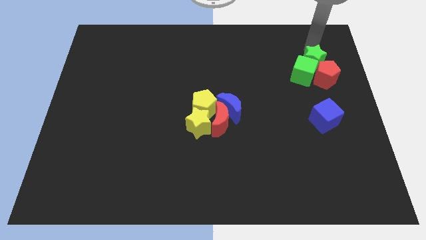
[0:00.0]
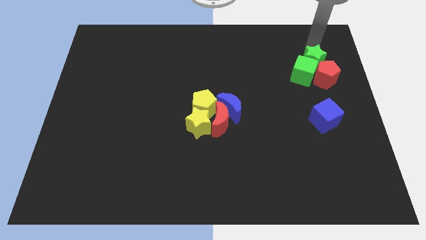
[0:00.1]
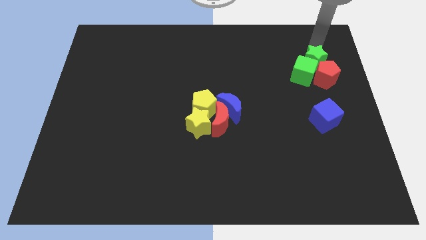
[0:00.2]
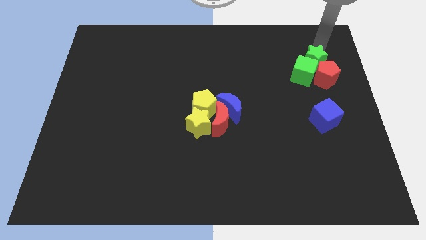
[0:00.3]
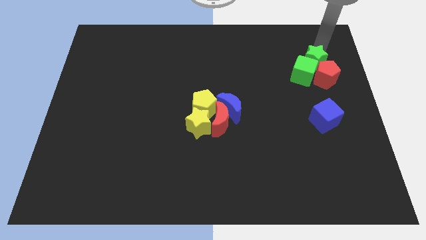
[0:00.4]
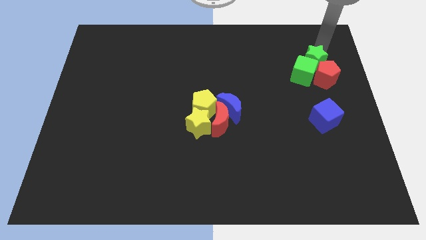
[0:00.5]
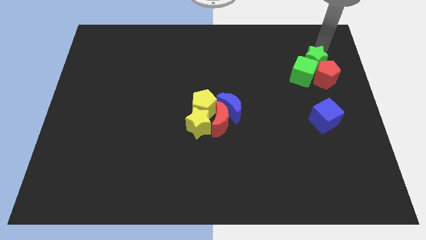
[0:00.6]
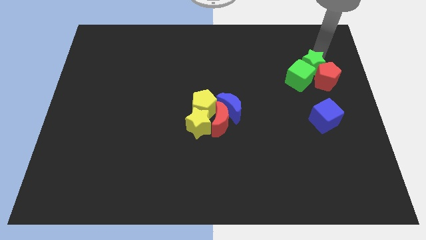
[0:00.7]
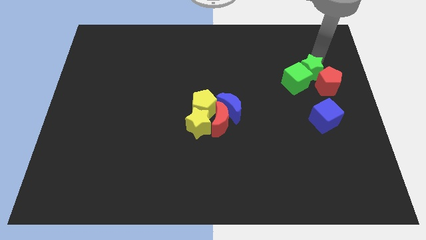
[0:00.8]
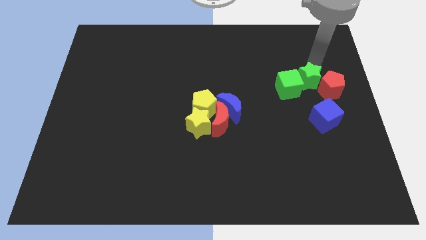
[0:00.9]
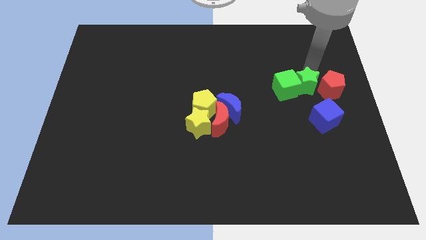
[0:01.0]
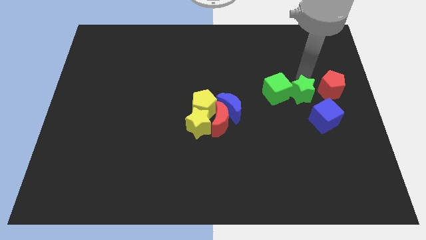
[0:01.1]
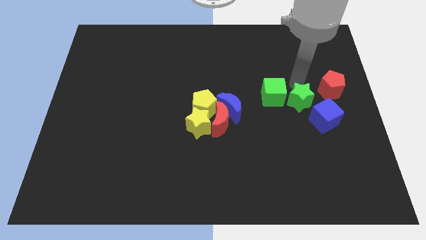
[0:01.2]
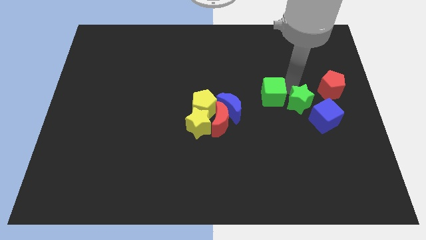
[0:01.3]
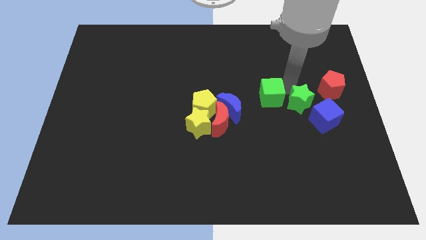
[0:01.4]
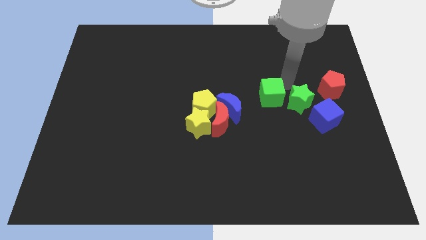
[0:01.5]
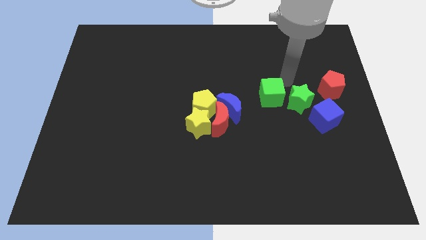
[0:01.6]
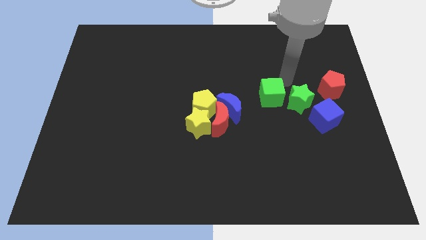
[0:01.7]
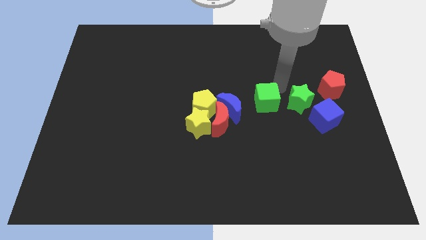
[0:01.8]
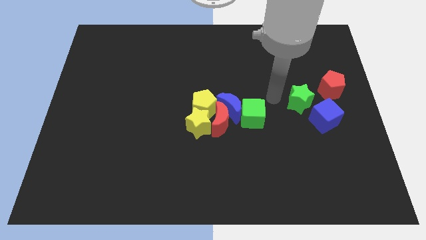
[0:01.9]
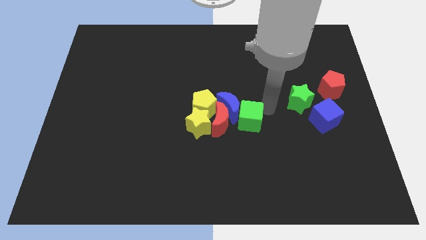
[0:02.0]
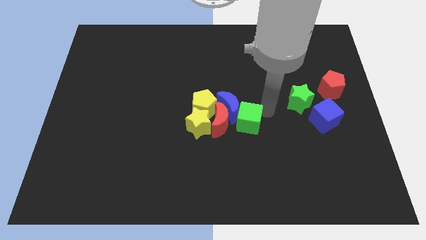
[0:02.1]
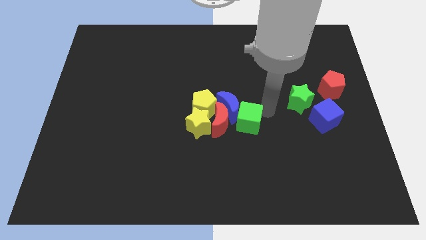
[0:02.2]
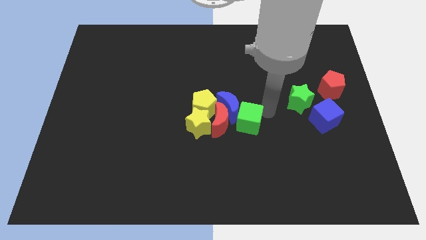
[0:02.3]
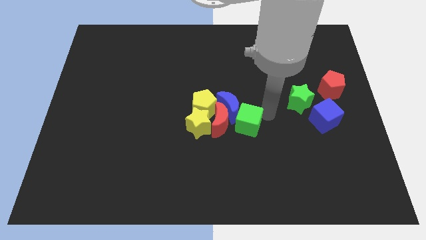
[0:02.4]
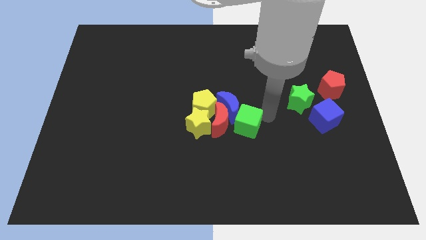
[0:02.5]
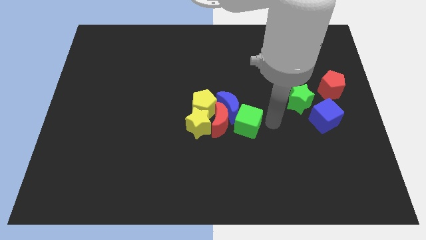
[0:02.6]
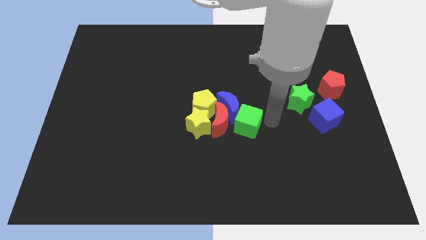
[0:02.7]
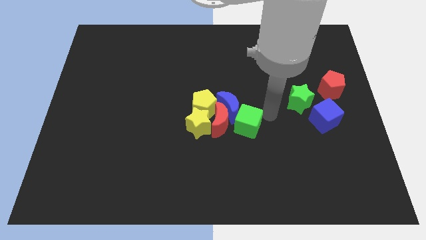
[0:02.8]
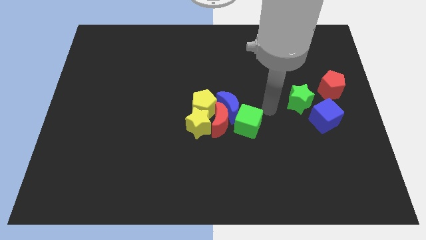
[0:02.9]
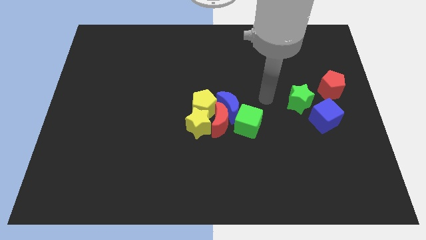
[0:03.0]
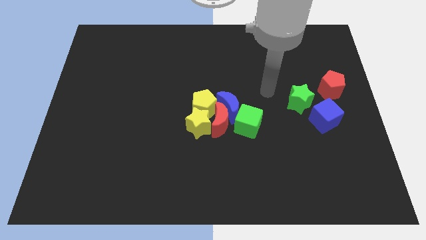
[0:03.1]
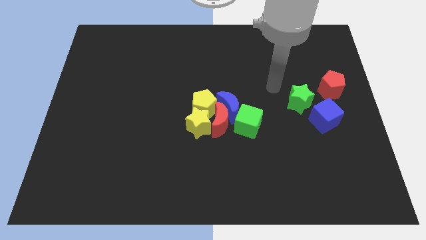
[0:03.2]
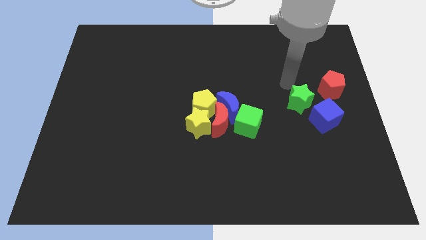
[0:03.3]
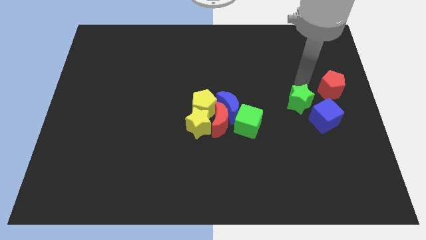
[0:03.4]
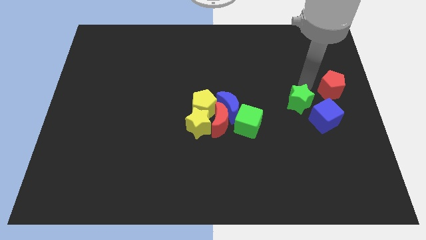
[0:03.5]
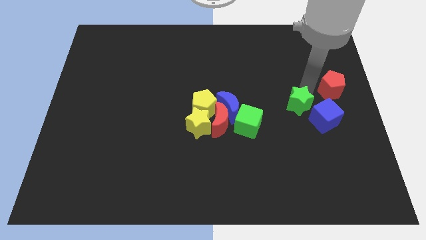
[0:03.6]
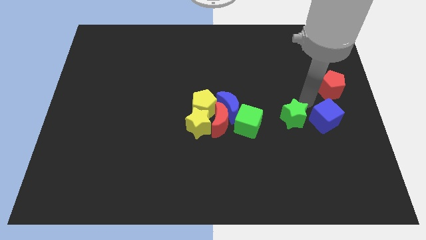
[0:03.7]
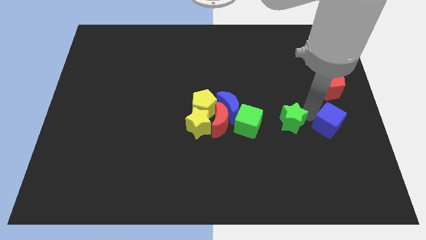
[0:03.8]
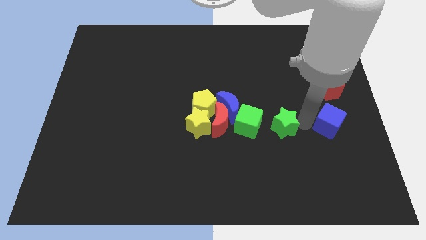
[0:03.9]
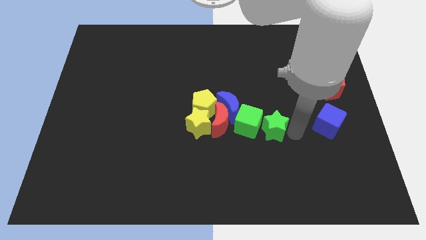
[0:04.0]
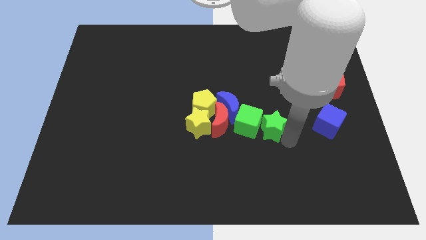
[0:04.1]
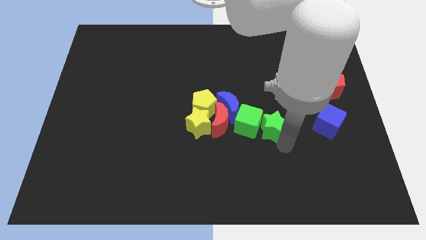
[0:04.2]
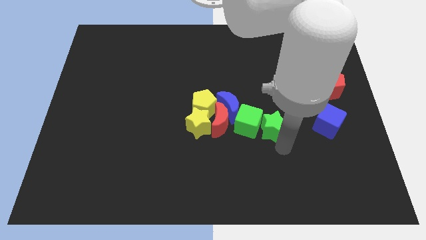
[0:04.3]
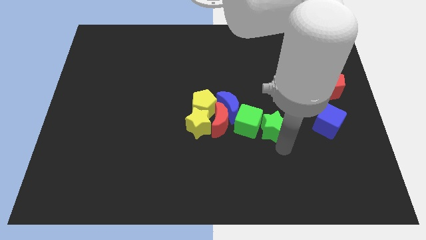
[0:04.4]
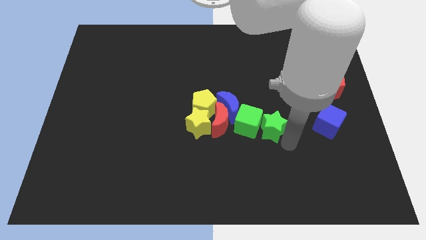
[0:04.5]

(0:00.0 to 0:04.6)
move the green blocks to the bottom right of the blue moon

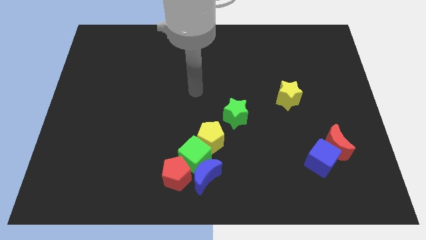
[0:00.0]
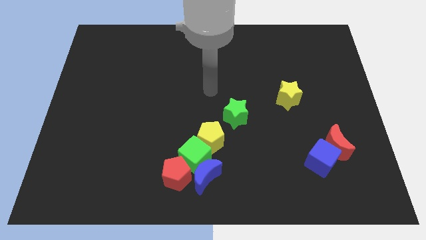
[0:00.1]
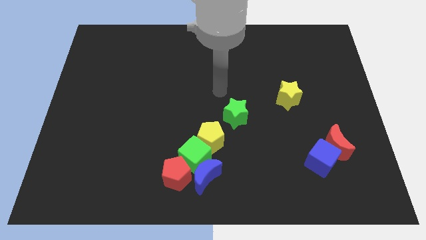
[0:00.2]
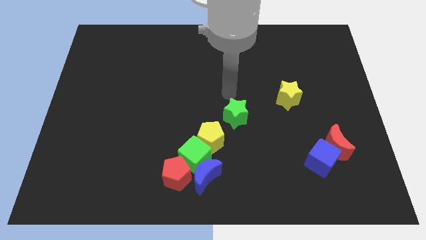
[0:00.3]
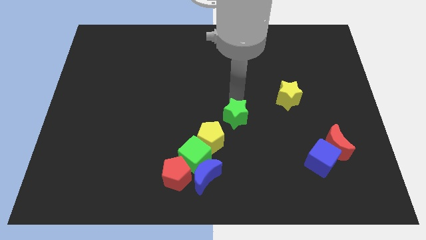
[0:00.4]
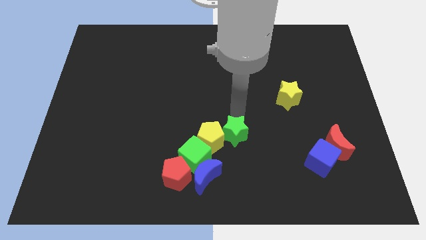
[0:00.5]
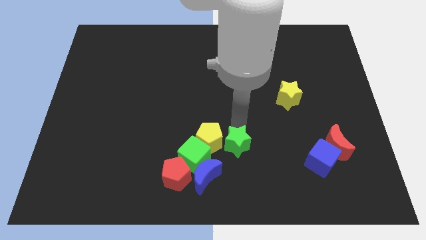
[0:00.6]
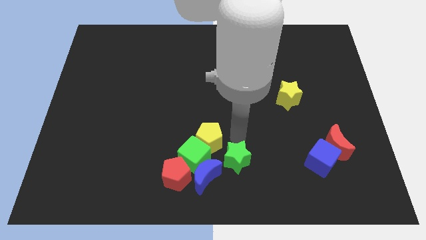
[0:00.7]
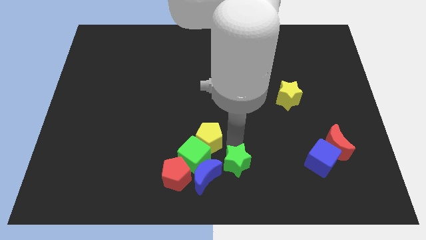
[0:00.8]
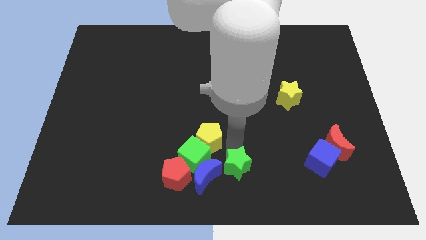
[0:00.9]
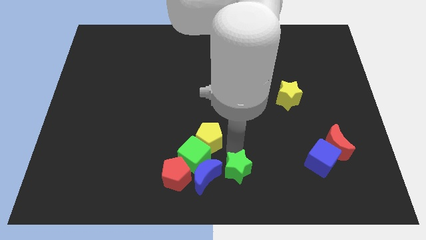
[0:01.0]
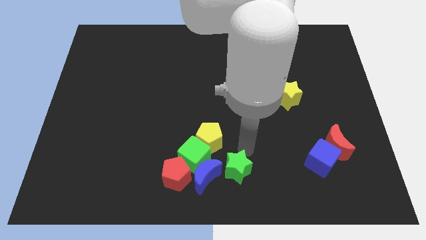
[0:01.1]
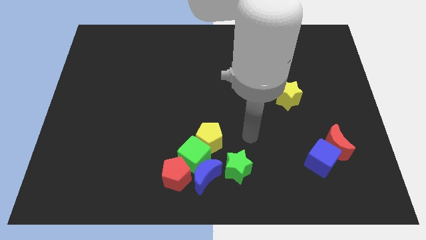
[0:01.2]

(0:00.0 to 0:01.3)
move the green star closer to the blue crescent

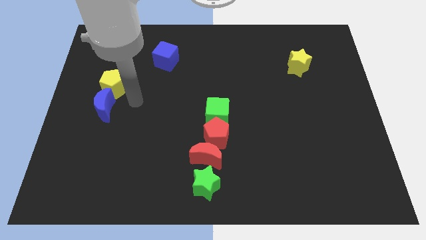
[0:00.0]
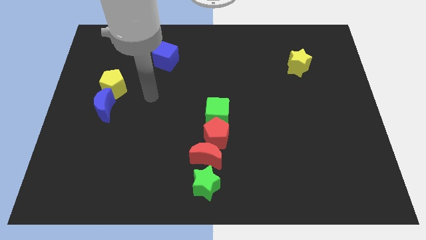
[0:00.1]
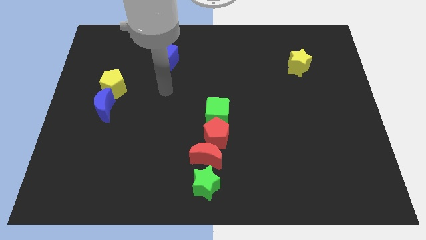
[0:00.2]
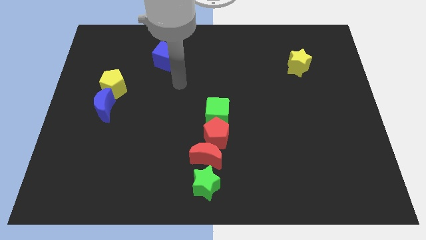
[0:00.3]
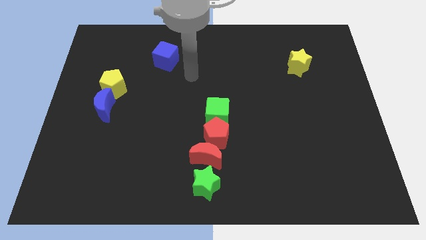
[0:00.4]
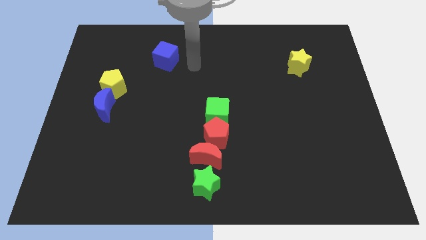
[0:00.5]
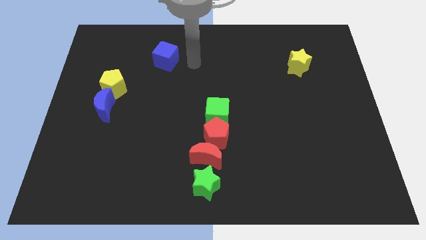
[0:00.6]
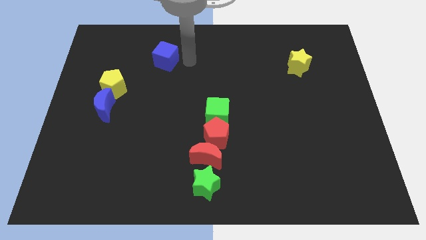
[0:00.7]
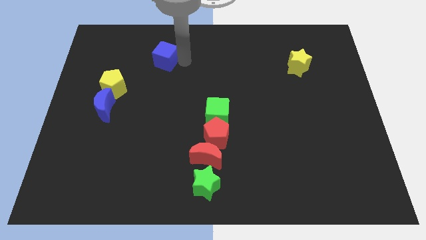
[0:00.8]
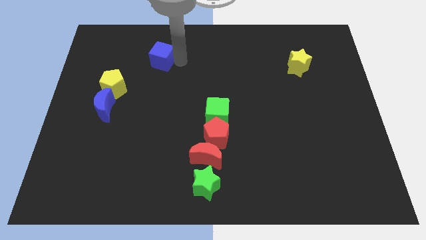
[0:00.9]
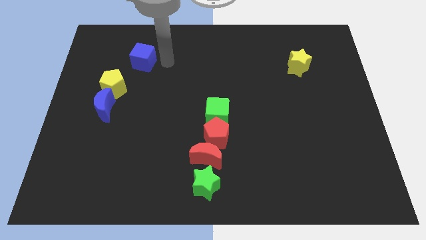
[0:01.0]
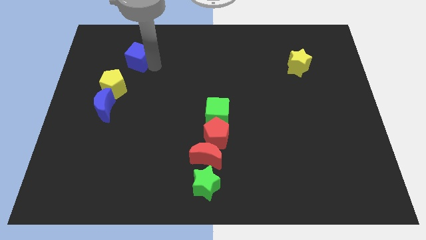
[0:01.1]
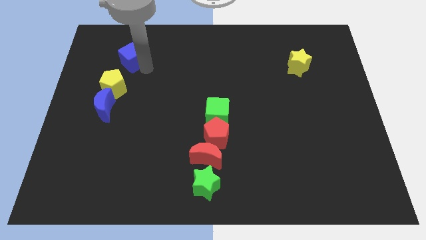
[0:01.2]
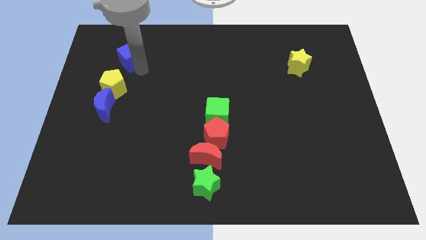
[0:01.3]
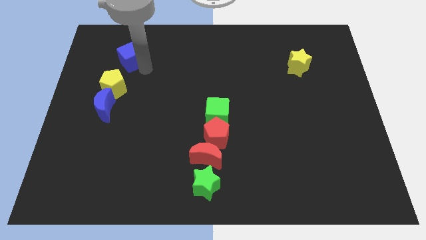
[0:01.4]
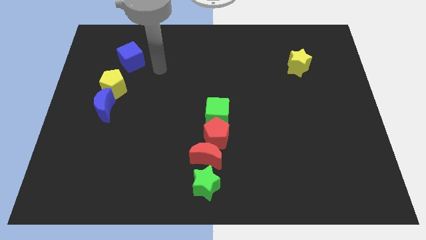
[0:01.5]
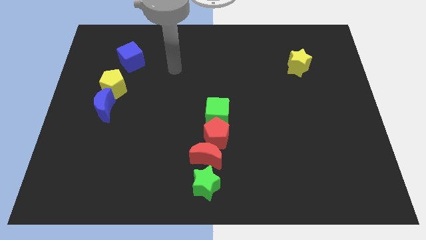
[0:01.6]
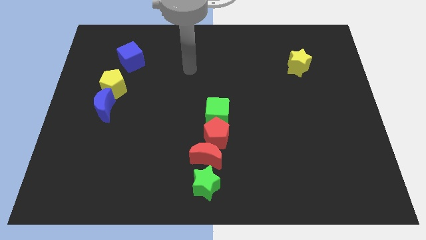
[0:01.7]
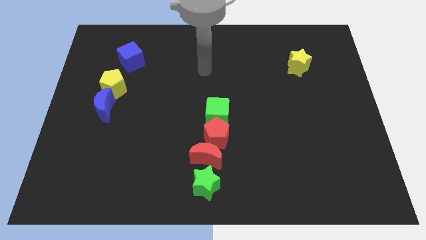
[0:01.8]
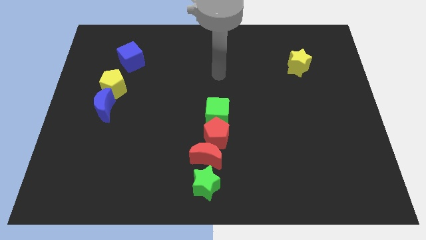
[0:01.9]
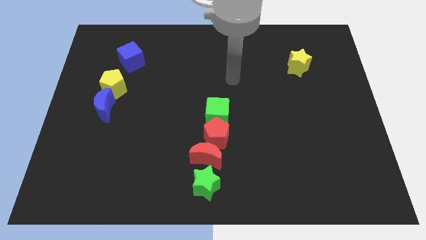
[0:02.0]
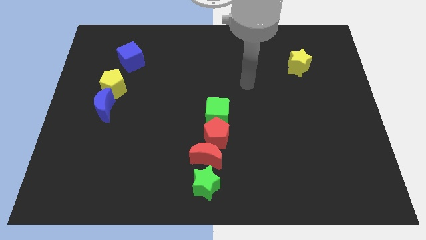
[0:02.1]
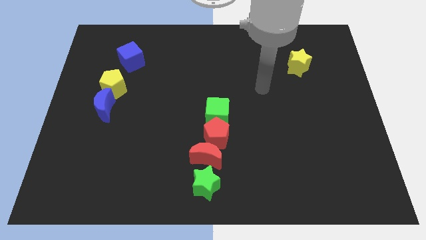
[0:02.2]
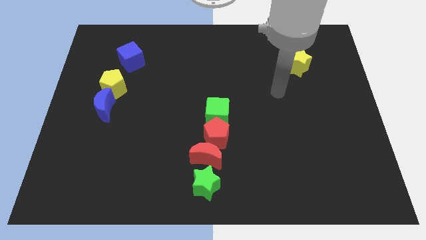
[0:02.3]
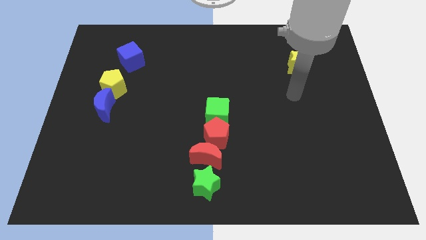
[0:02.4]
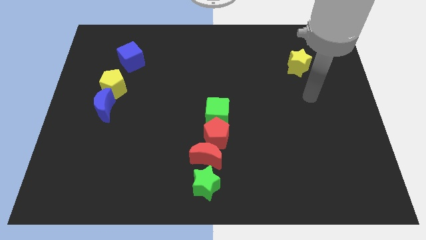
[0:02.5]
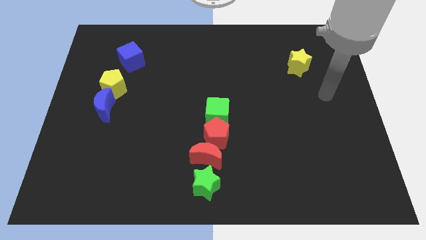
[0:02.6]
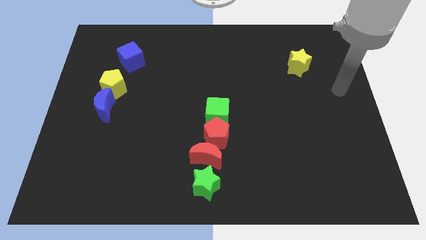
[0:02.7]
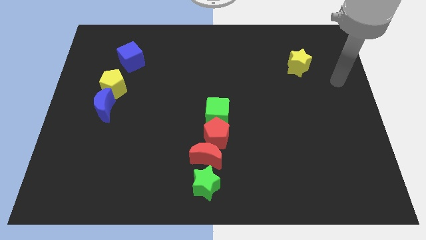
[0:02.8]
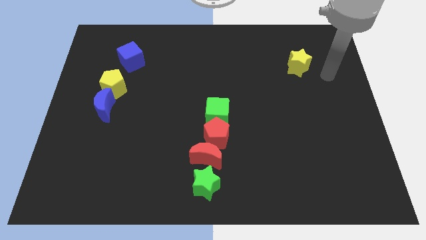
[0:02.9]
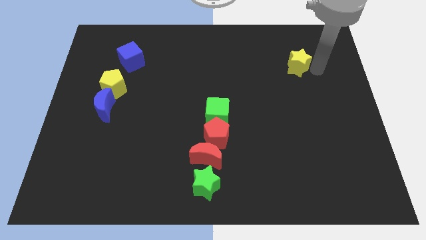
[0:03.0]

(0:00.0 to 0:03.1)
move the blue cube above the yellow pentagon

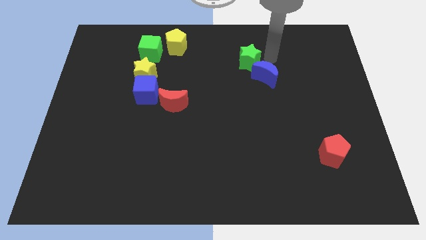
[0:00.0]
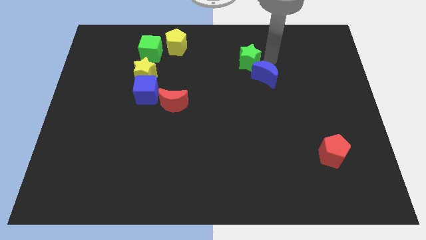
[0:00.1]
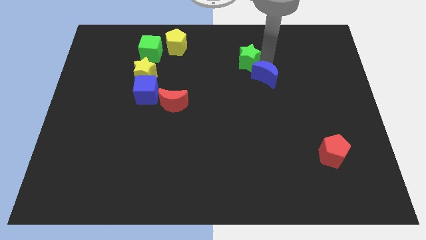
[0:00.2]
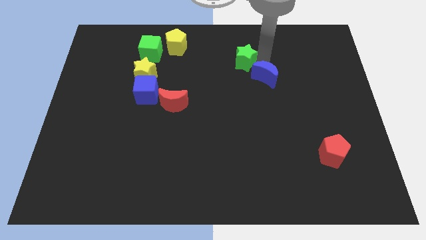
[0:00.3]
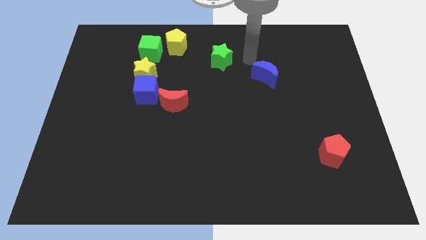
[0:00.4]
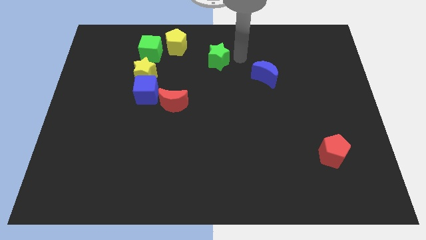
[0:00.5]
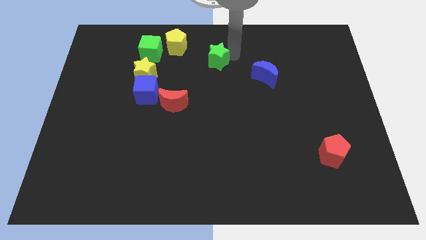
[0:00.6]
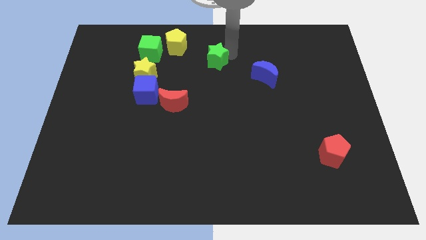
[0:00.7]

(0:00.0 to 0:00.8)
separate the green star and blue moon
